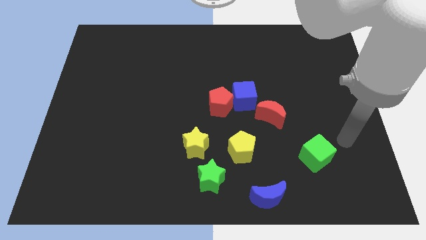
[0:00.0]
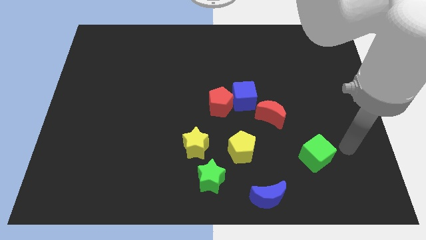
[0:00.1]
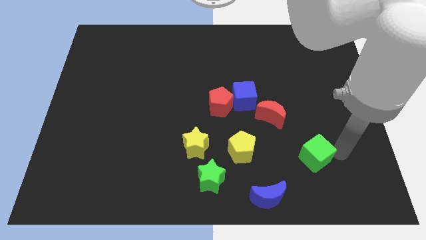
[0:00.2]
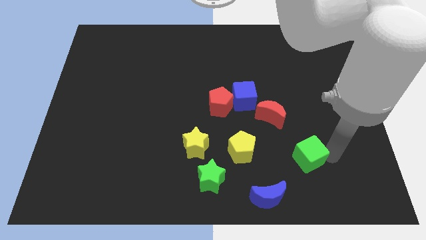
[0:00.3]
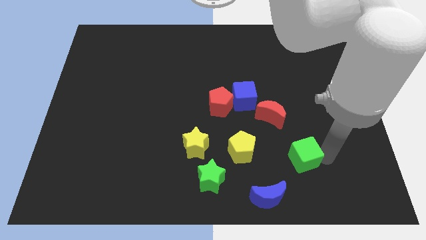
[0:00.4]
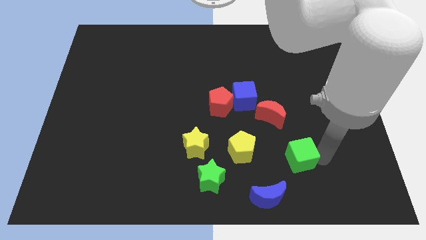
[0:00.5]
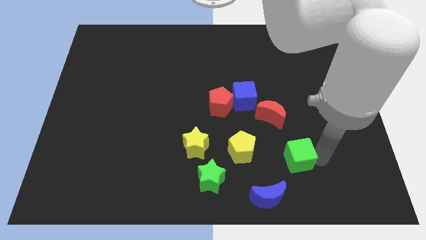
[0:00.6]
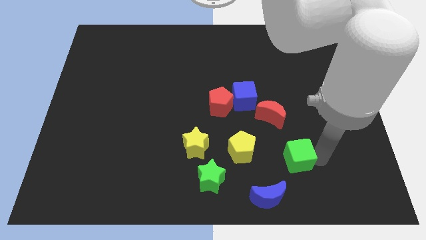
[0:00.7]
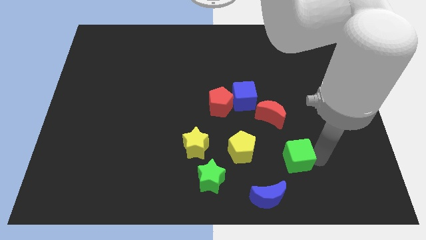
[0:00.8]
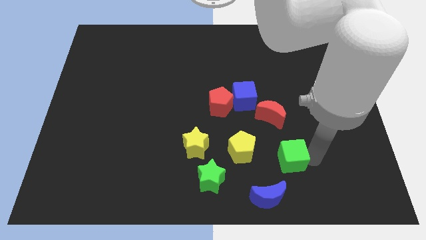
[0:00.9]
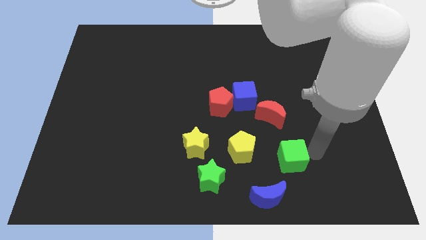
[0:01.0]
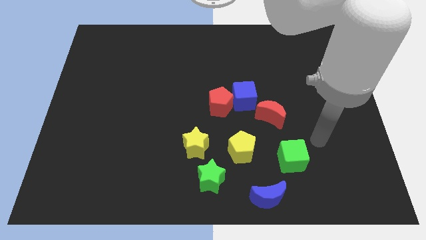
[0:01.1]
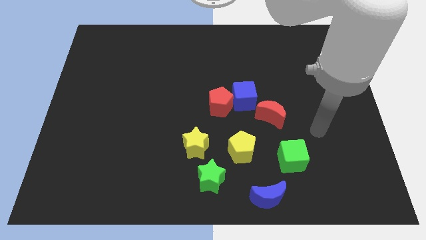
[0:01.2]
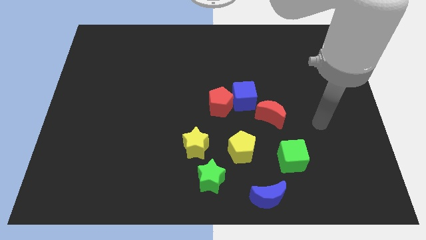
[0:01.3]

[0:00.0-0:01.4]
push the green cube towards the top of the blue crescent

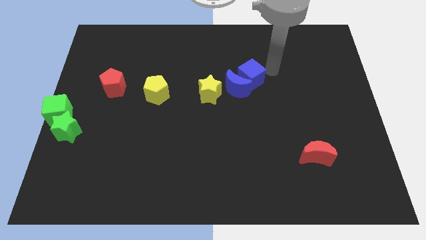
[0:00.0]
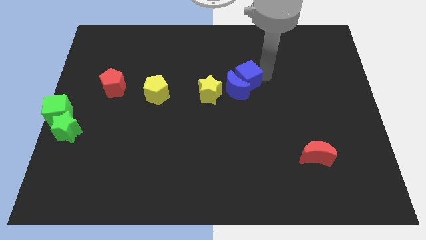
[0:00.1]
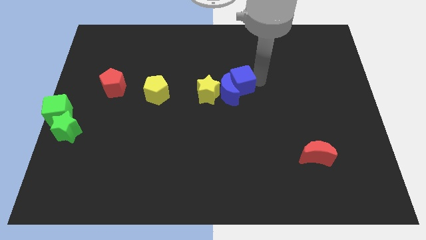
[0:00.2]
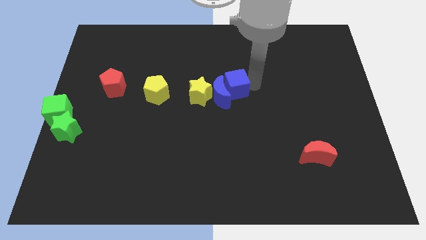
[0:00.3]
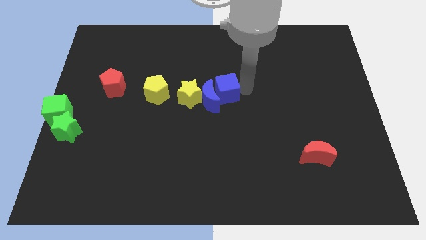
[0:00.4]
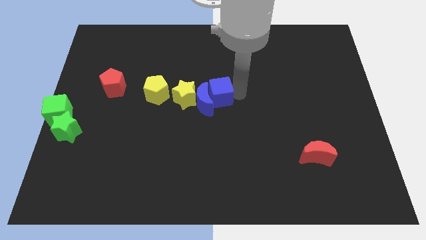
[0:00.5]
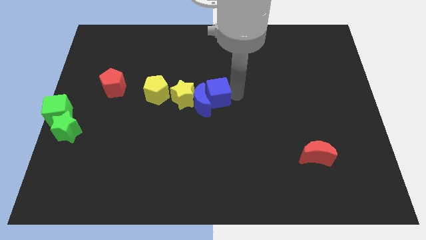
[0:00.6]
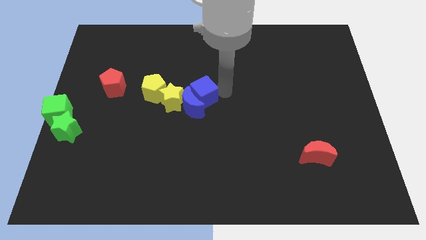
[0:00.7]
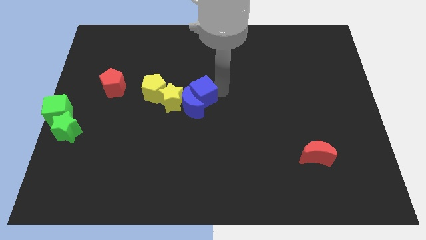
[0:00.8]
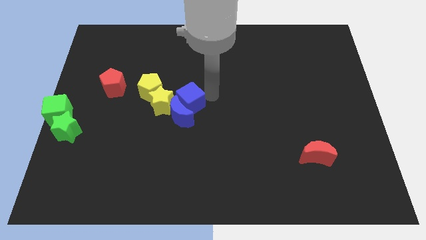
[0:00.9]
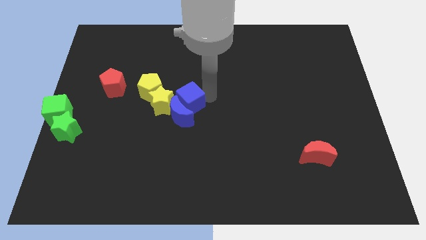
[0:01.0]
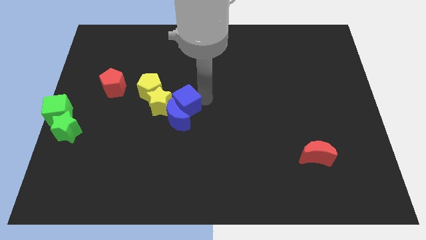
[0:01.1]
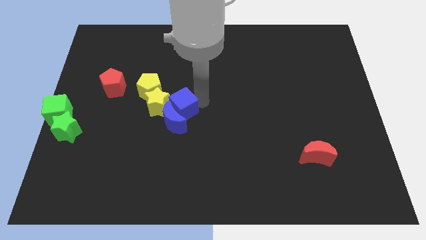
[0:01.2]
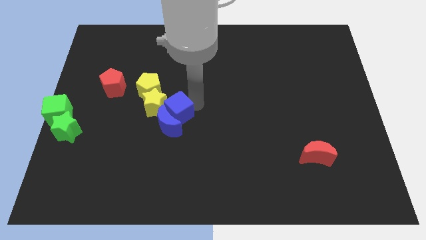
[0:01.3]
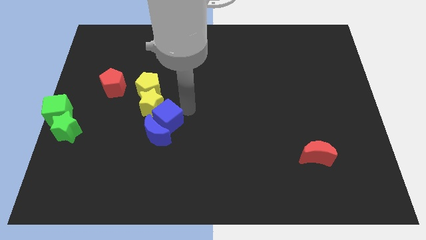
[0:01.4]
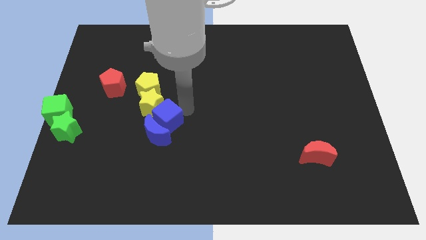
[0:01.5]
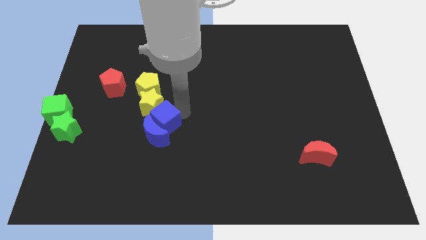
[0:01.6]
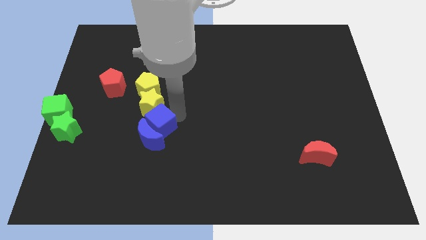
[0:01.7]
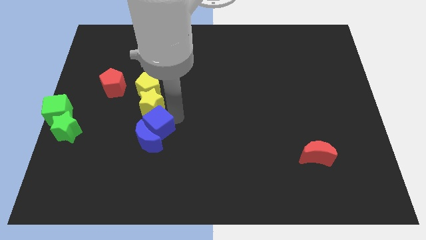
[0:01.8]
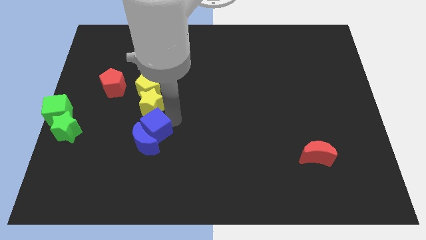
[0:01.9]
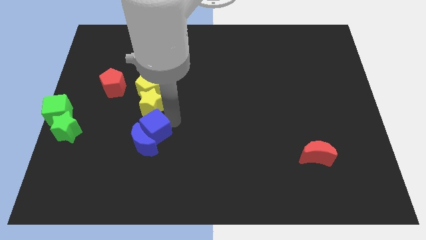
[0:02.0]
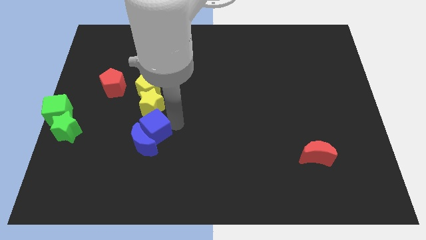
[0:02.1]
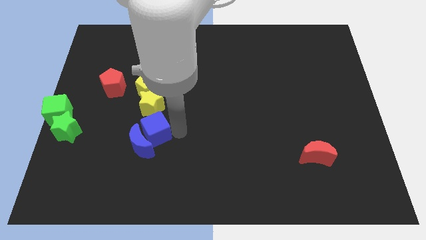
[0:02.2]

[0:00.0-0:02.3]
push the blue cube and blue moon together towards left side

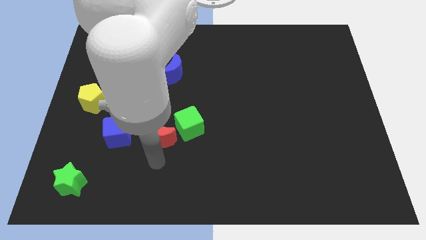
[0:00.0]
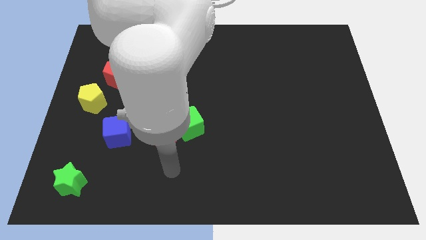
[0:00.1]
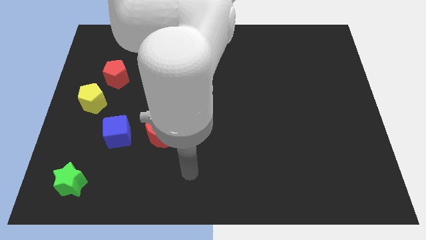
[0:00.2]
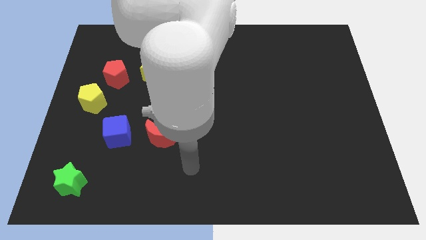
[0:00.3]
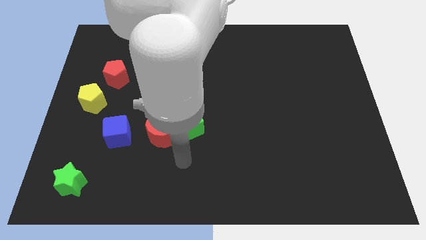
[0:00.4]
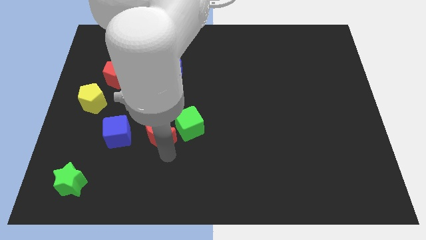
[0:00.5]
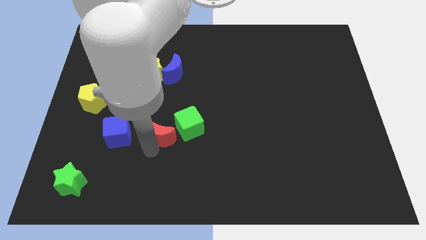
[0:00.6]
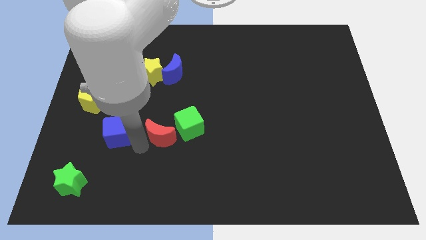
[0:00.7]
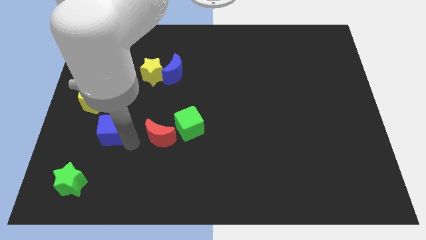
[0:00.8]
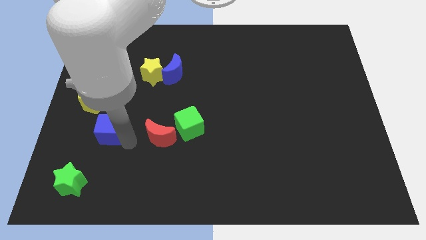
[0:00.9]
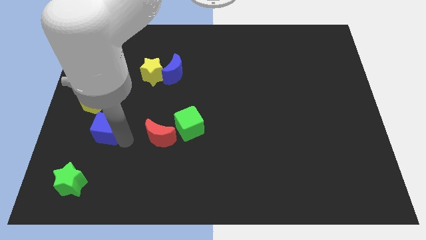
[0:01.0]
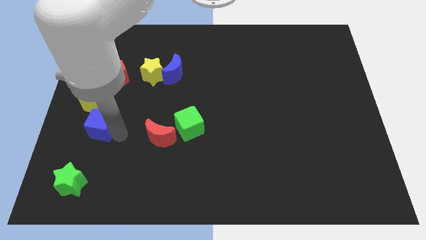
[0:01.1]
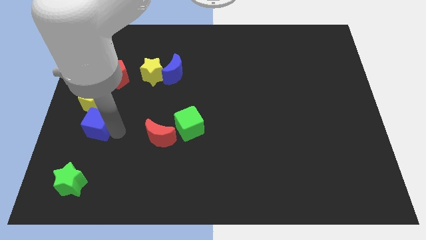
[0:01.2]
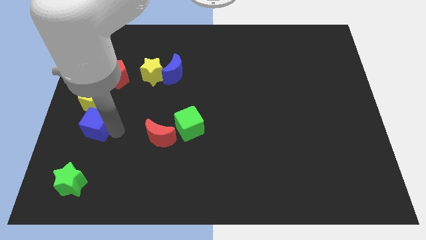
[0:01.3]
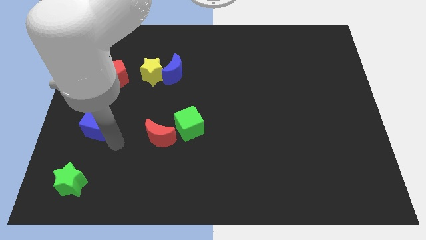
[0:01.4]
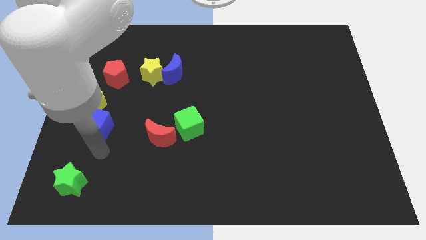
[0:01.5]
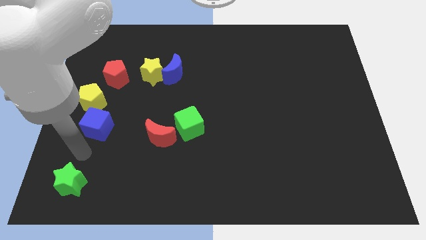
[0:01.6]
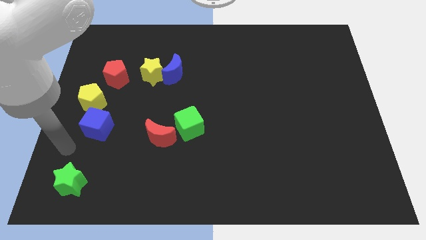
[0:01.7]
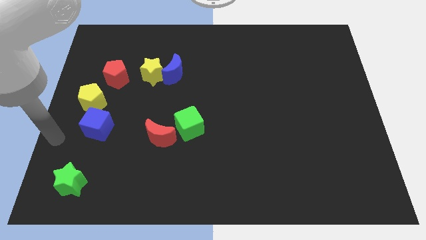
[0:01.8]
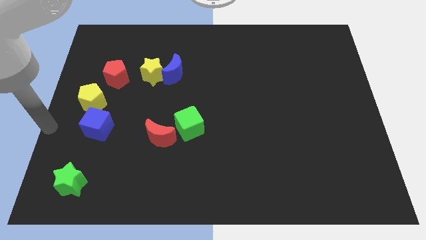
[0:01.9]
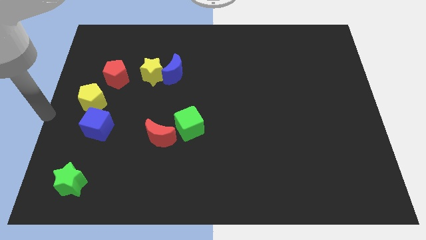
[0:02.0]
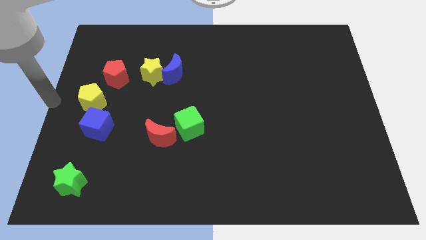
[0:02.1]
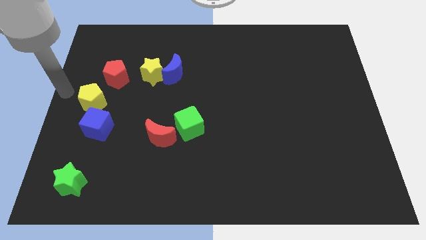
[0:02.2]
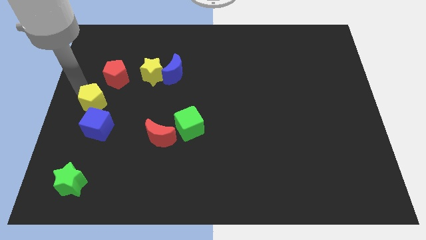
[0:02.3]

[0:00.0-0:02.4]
place the blue cube below the yellow pentagon

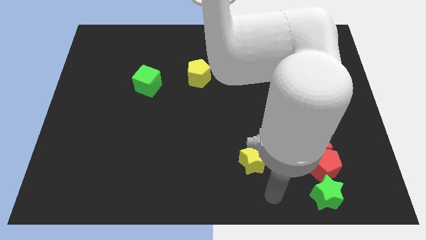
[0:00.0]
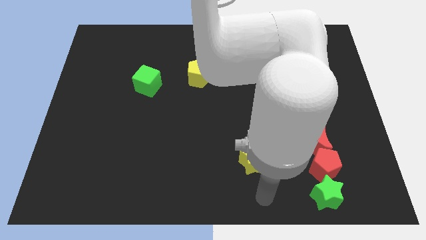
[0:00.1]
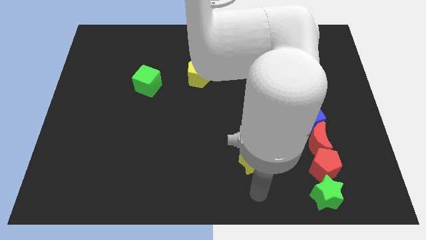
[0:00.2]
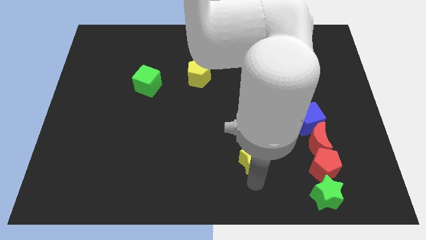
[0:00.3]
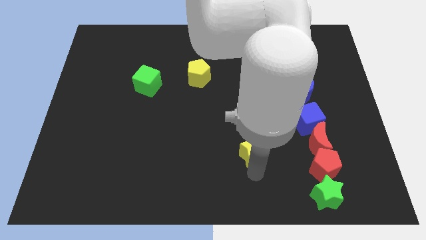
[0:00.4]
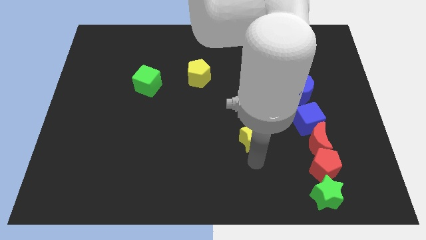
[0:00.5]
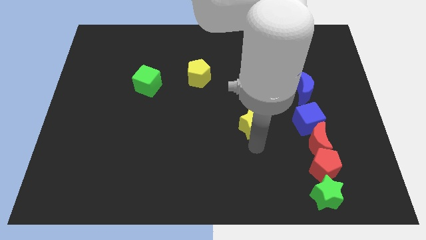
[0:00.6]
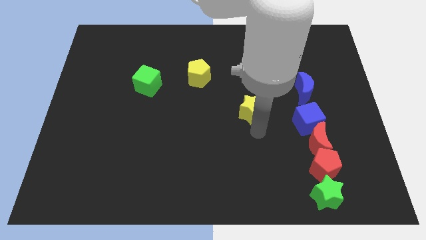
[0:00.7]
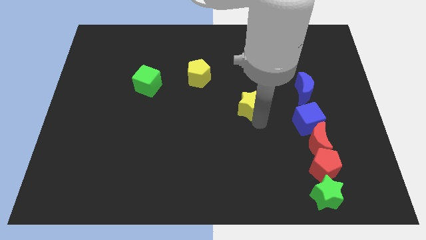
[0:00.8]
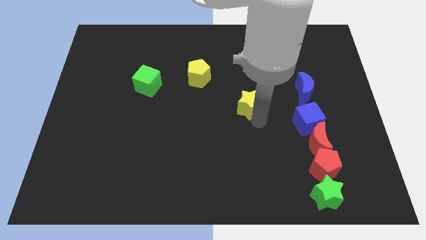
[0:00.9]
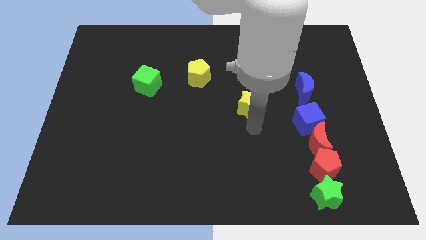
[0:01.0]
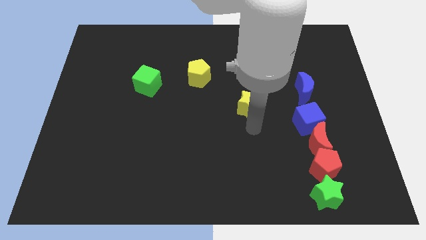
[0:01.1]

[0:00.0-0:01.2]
move the yellow star diagonal to the yellow pentagon

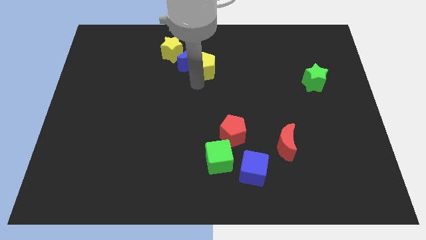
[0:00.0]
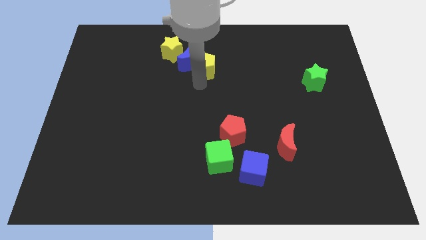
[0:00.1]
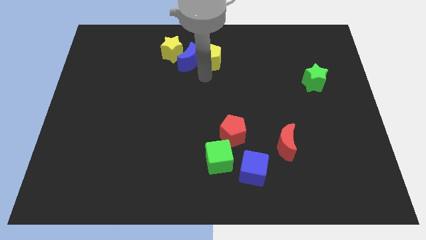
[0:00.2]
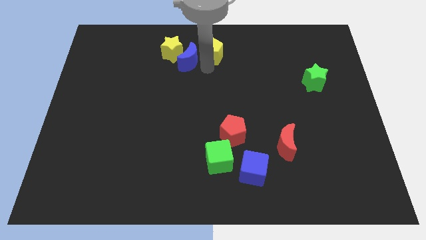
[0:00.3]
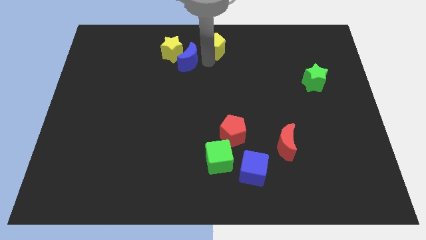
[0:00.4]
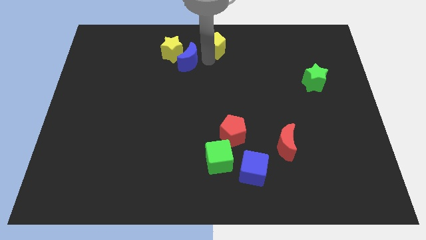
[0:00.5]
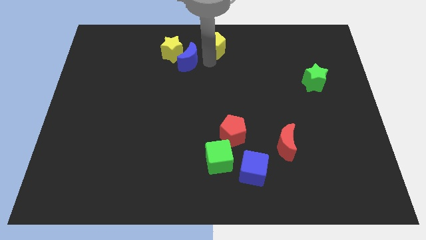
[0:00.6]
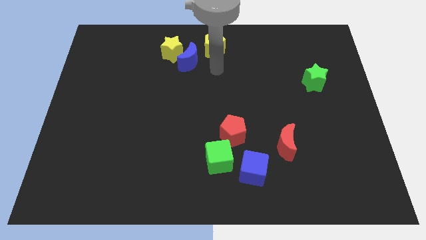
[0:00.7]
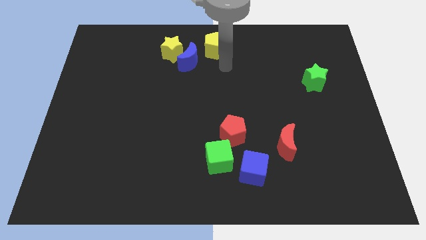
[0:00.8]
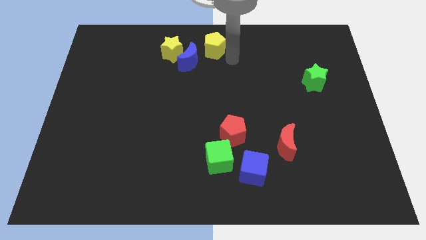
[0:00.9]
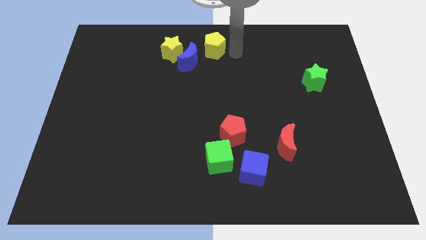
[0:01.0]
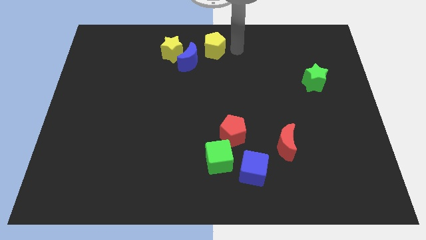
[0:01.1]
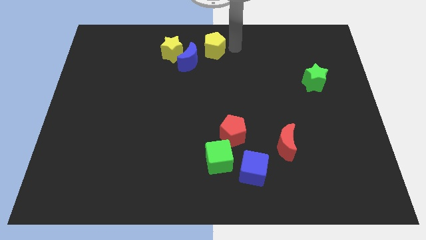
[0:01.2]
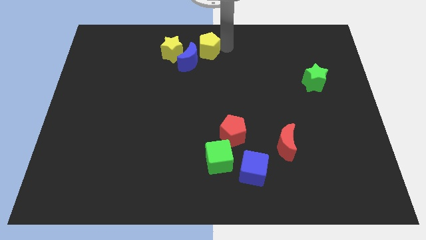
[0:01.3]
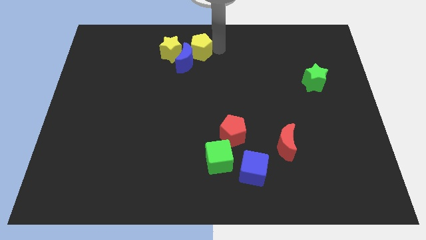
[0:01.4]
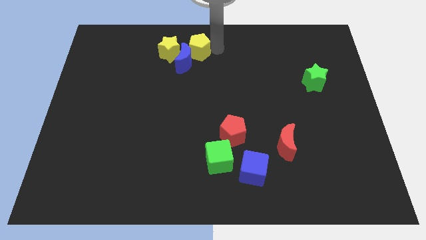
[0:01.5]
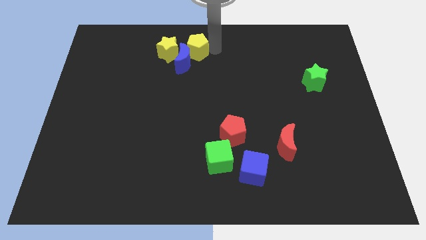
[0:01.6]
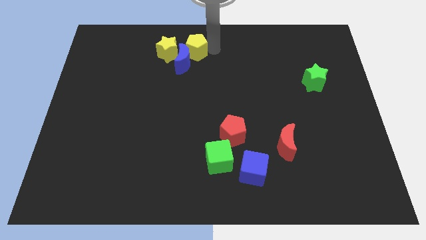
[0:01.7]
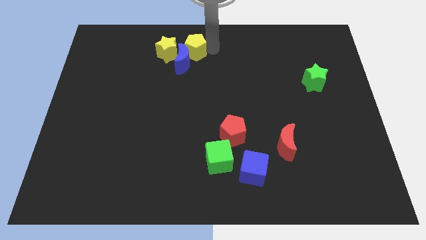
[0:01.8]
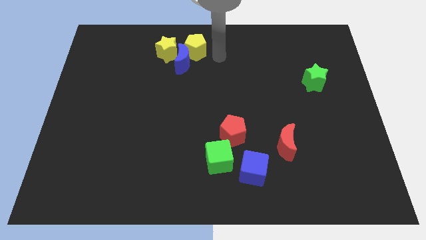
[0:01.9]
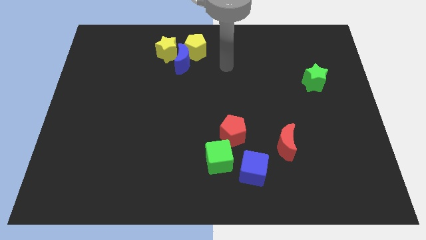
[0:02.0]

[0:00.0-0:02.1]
push yellow pentagon into blue moon
